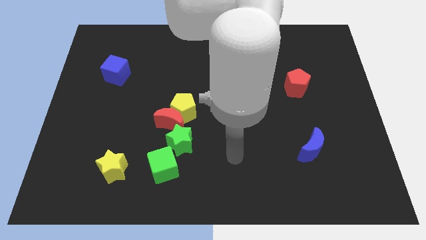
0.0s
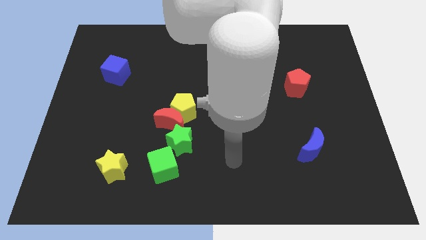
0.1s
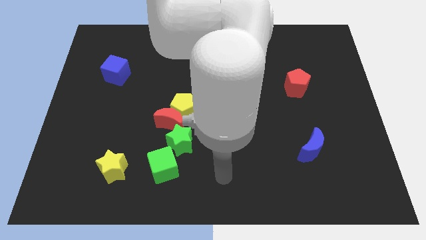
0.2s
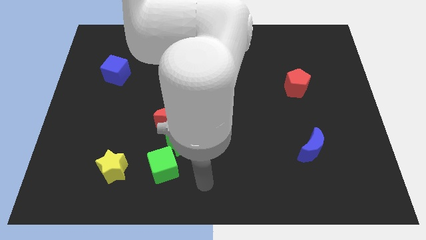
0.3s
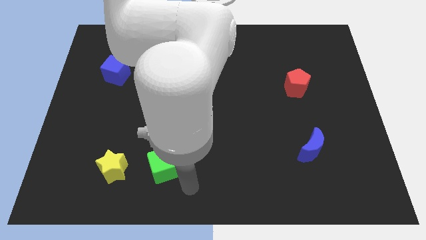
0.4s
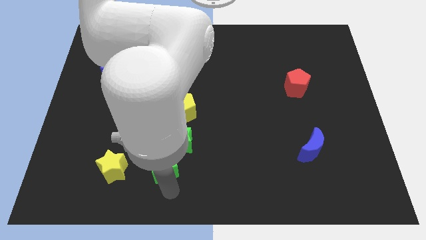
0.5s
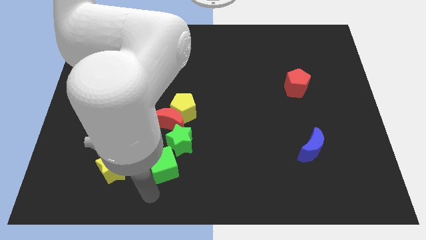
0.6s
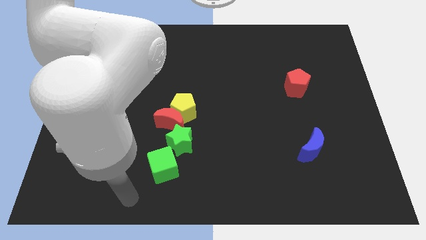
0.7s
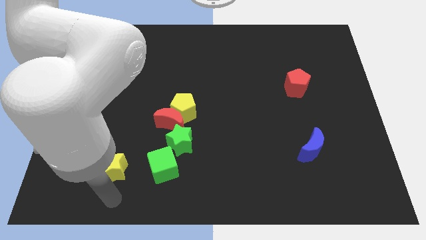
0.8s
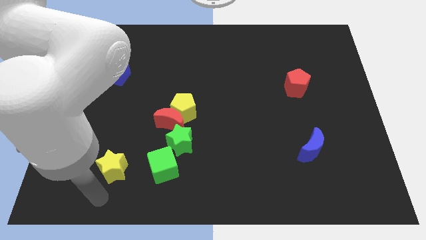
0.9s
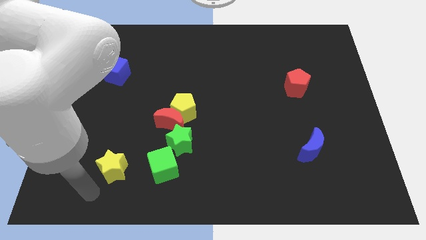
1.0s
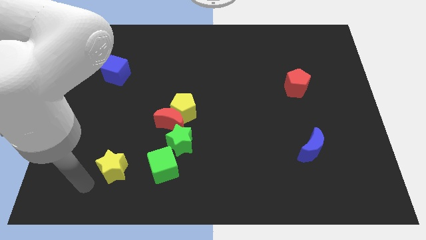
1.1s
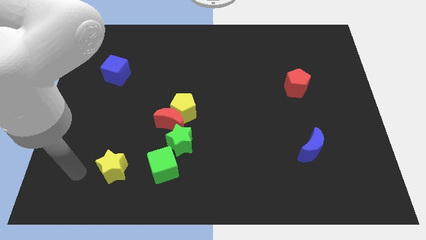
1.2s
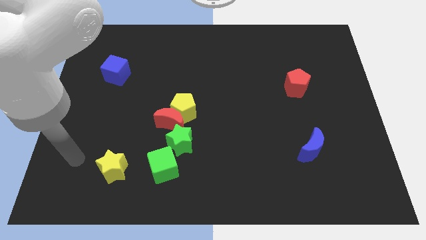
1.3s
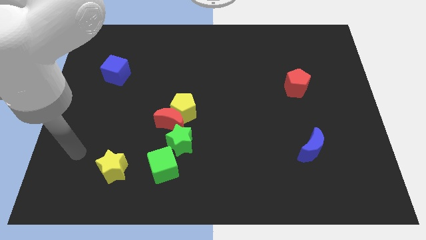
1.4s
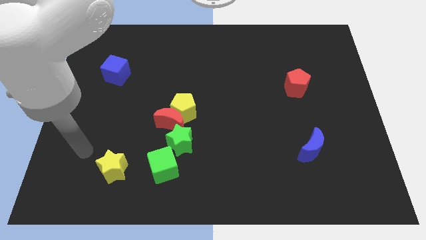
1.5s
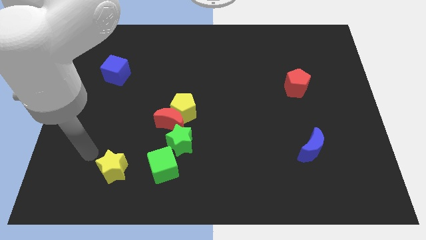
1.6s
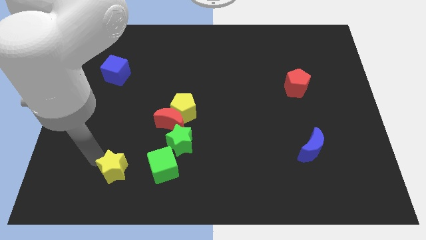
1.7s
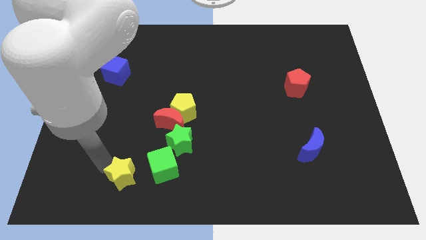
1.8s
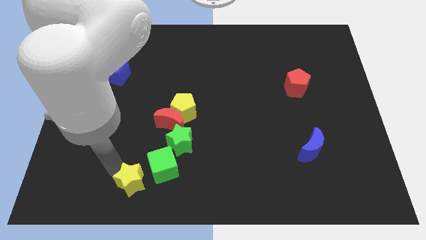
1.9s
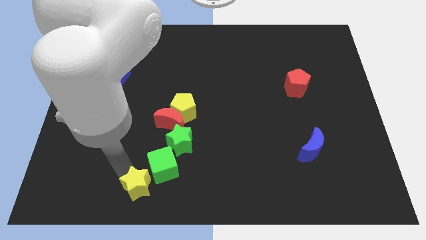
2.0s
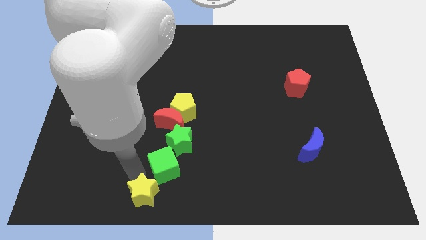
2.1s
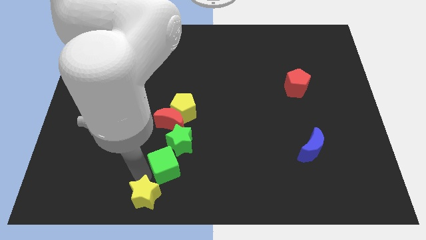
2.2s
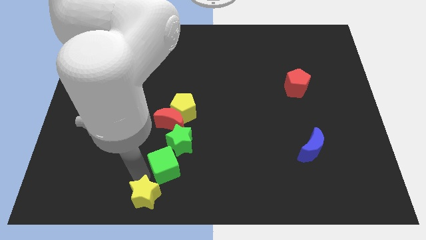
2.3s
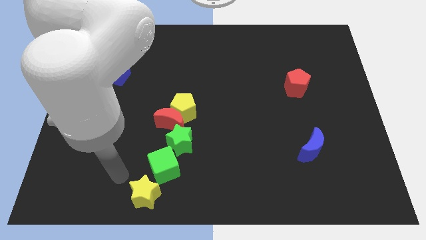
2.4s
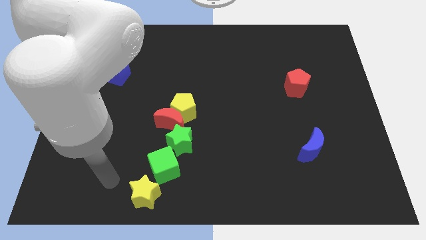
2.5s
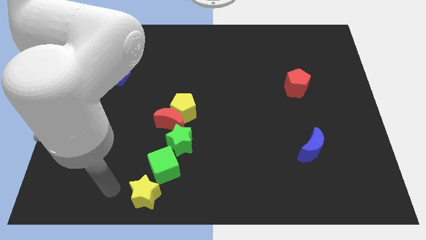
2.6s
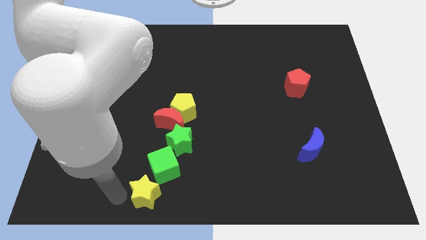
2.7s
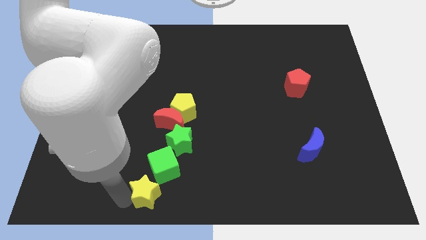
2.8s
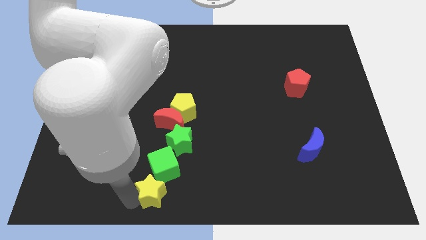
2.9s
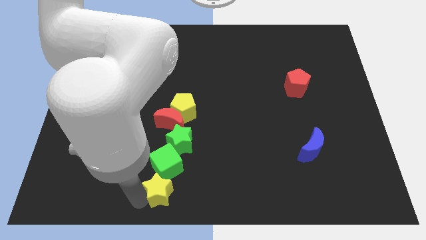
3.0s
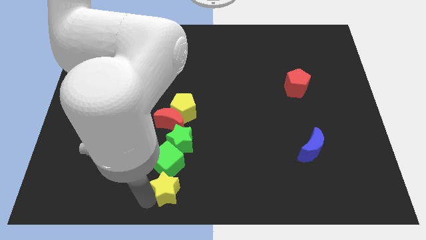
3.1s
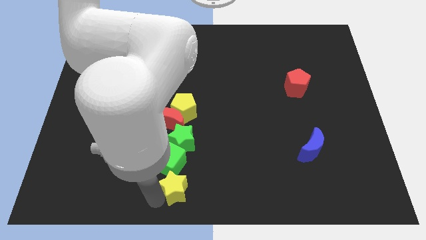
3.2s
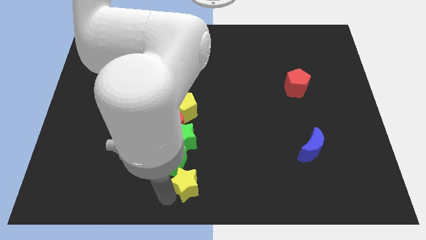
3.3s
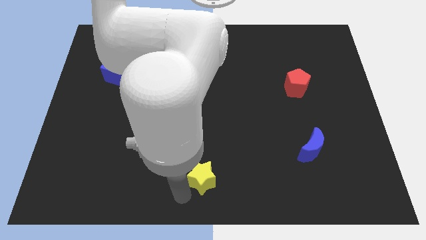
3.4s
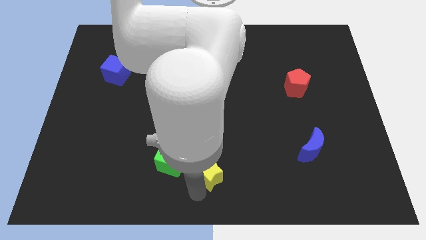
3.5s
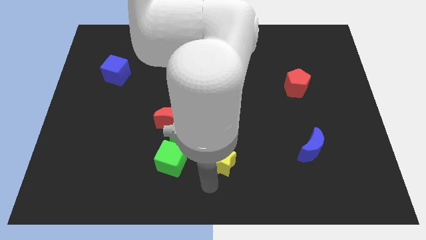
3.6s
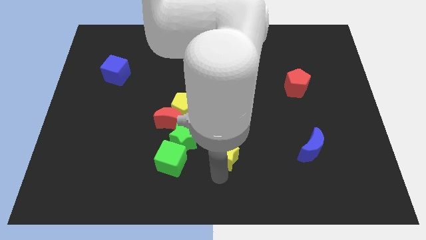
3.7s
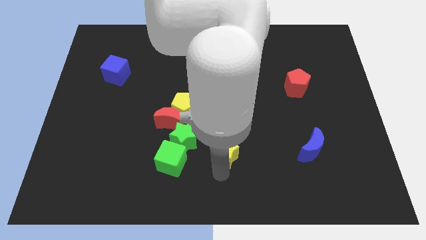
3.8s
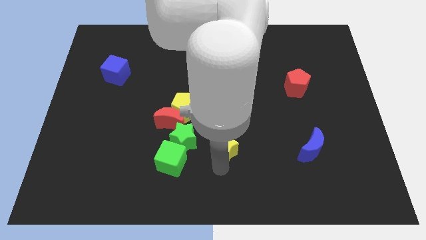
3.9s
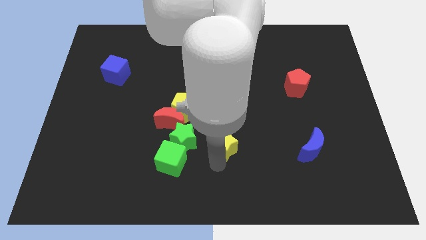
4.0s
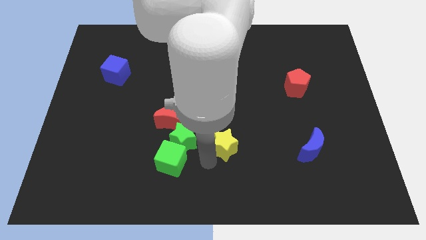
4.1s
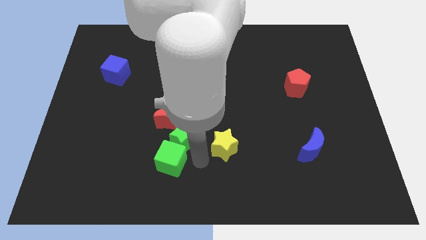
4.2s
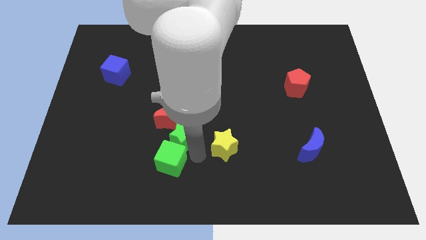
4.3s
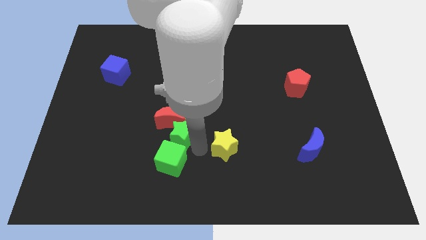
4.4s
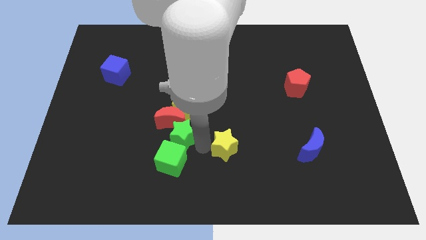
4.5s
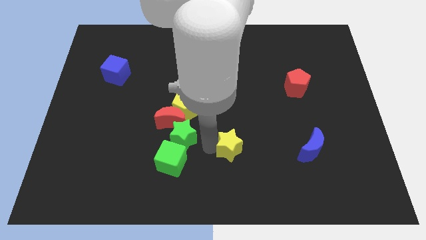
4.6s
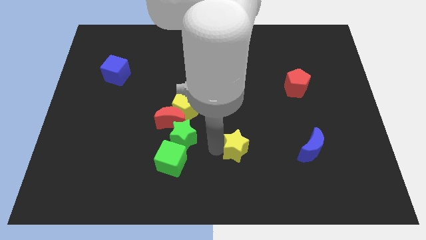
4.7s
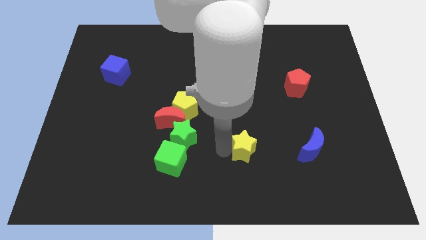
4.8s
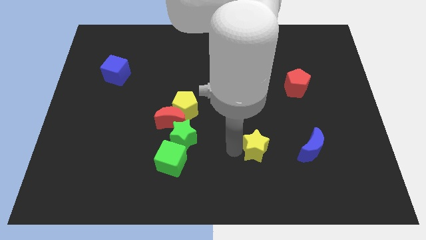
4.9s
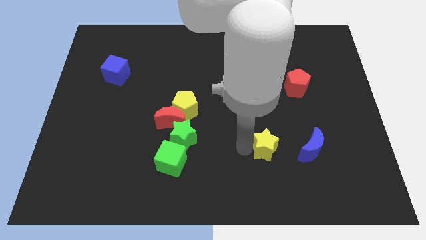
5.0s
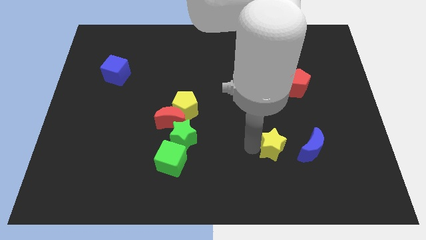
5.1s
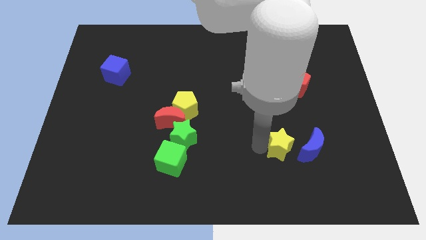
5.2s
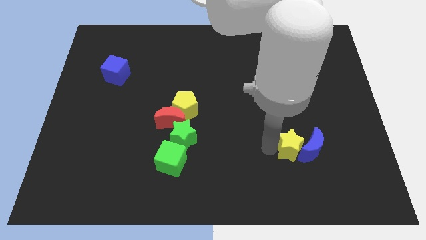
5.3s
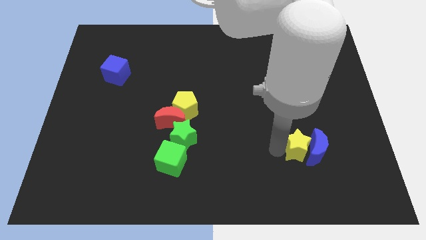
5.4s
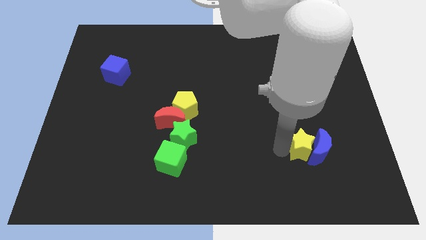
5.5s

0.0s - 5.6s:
slide the yellow star to the blue moon

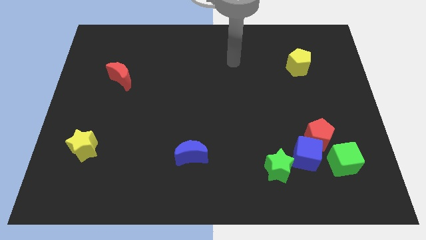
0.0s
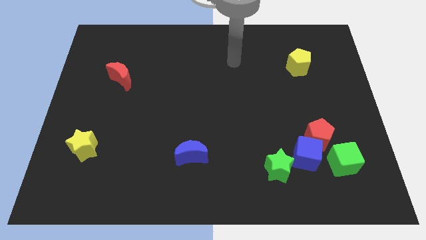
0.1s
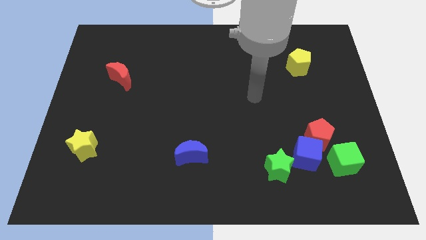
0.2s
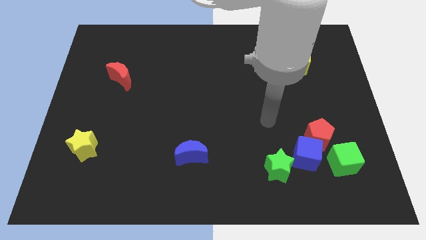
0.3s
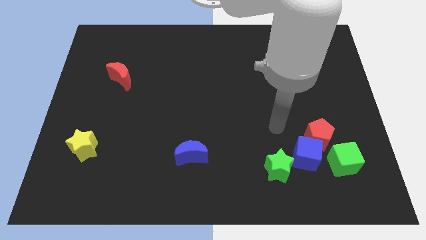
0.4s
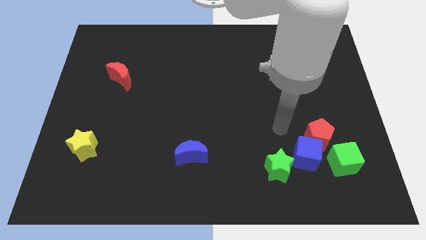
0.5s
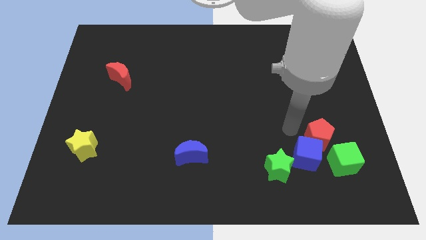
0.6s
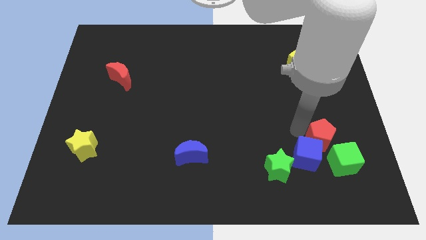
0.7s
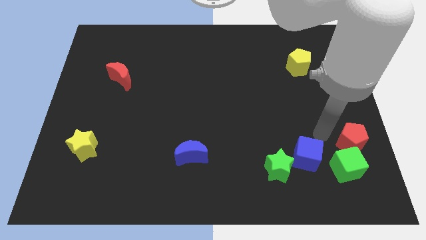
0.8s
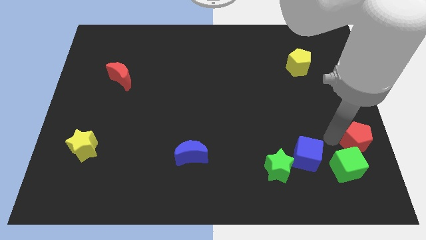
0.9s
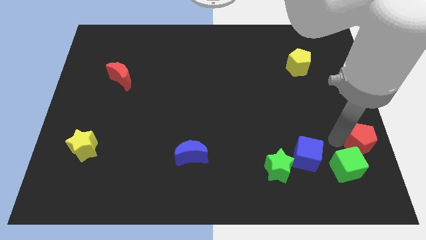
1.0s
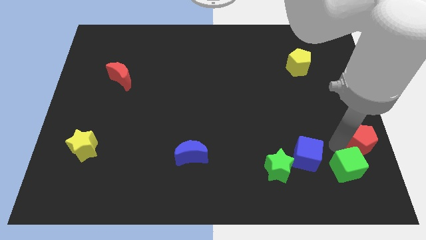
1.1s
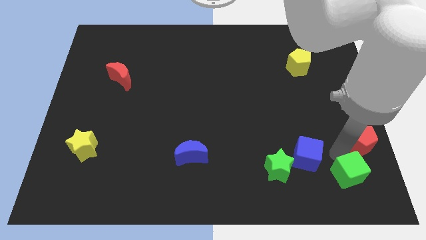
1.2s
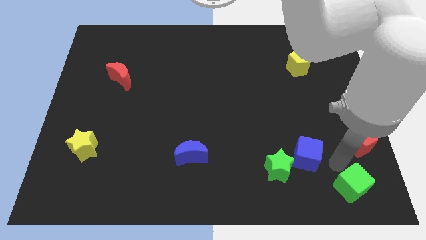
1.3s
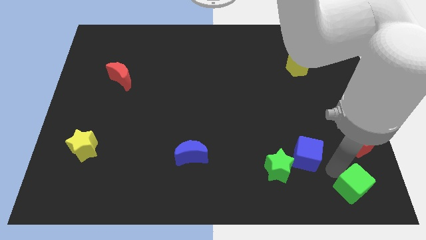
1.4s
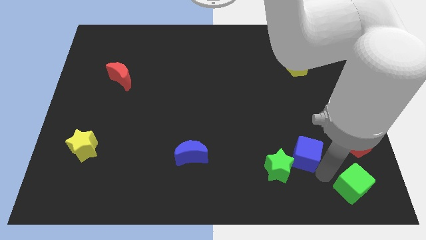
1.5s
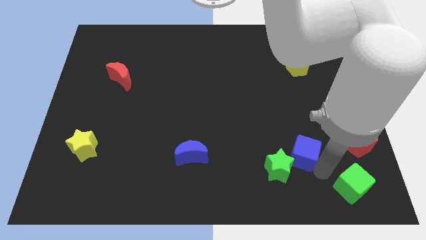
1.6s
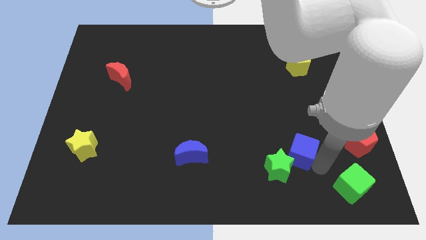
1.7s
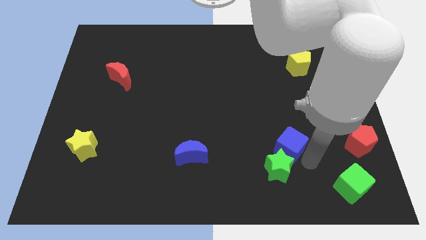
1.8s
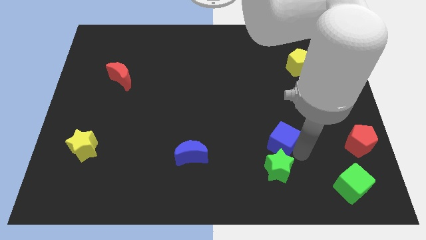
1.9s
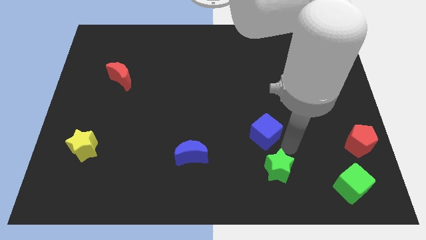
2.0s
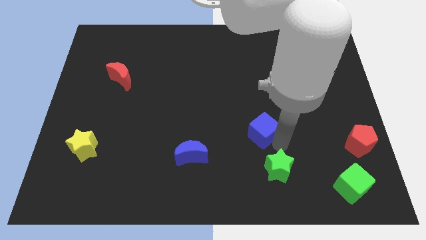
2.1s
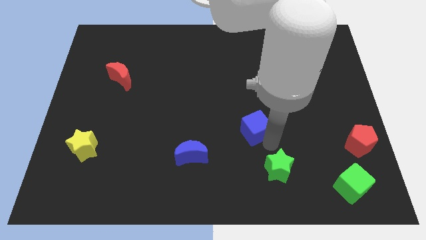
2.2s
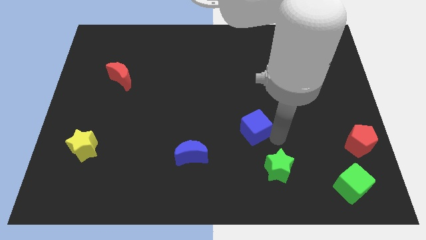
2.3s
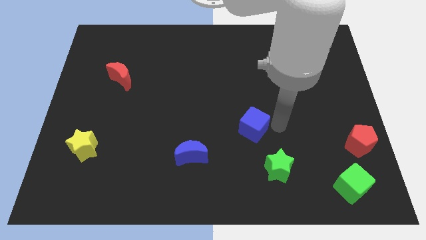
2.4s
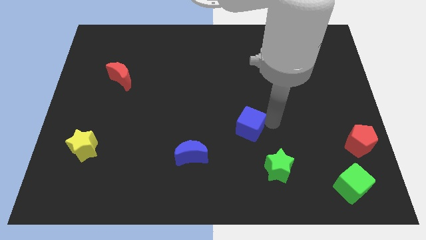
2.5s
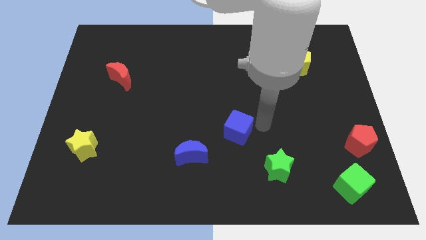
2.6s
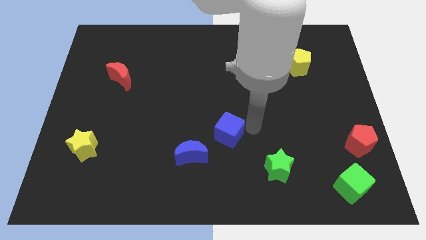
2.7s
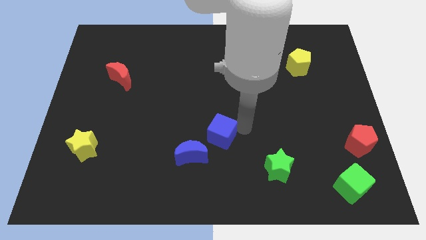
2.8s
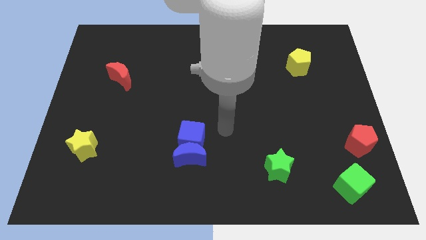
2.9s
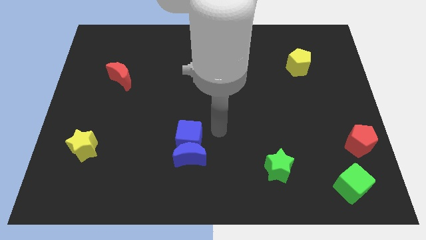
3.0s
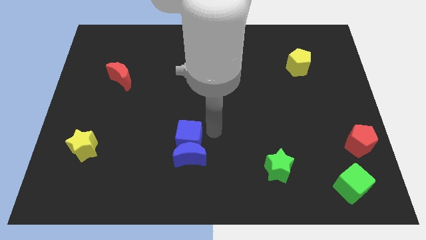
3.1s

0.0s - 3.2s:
move the blue cube towards the blue moon
